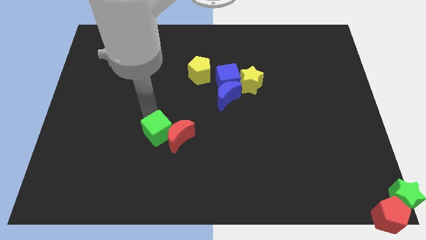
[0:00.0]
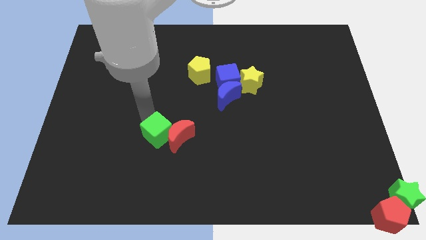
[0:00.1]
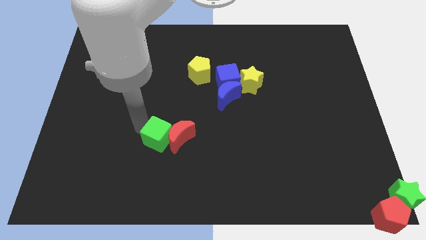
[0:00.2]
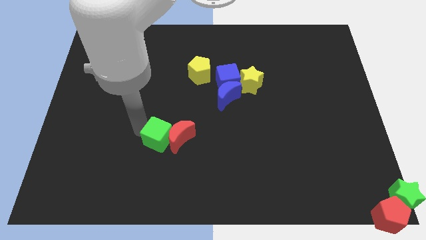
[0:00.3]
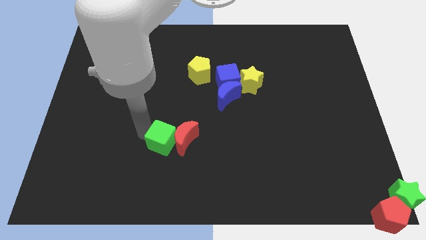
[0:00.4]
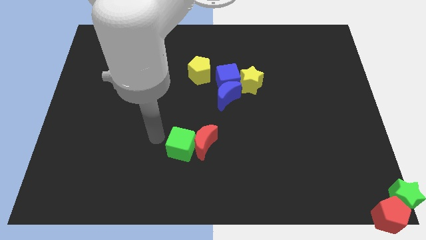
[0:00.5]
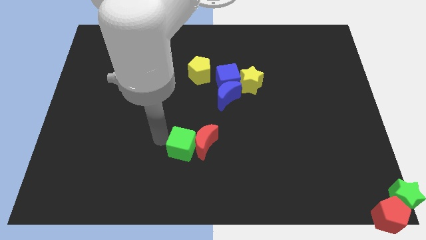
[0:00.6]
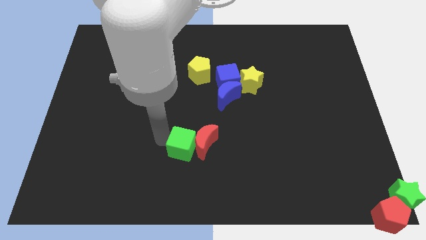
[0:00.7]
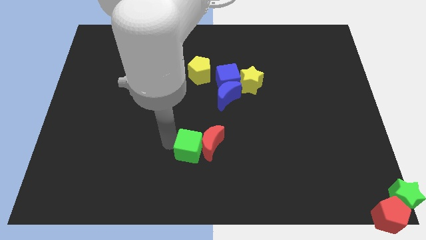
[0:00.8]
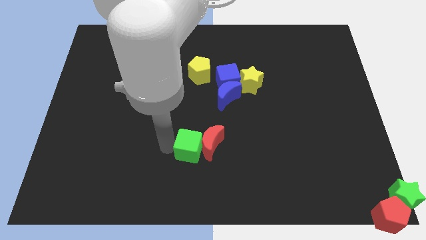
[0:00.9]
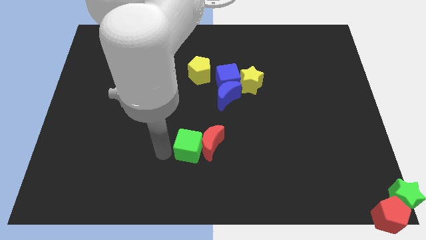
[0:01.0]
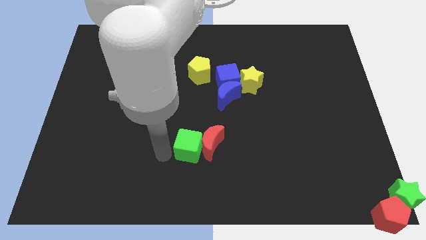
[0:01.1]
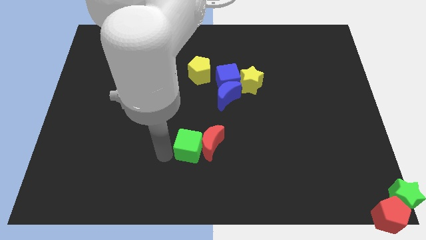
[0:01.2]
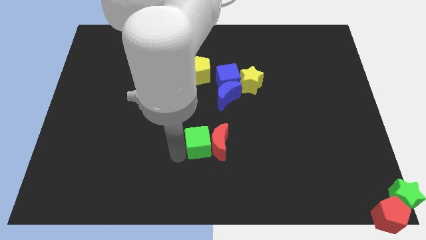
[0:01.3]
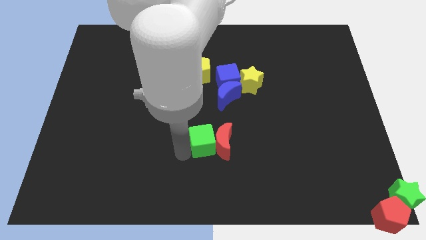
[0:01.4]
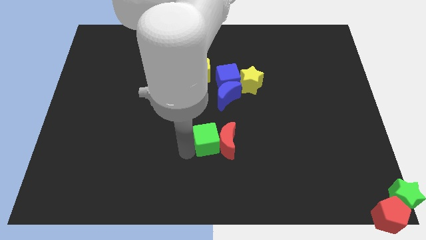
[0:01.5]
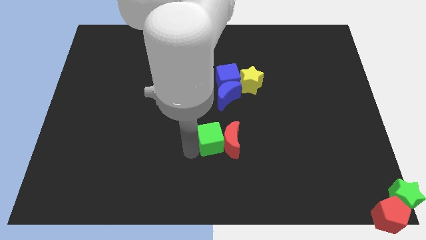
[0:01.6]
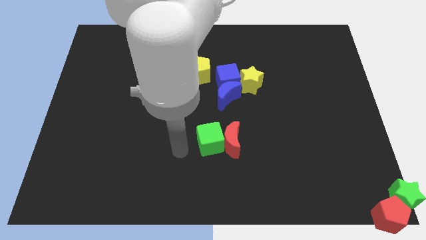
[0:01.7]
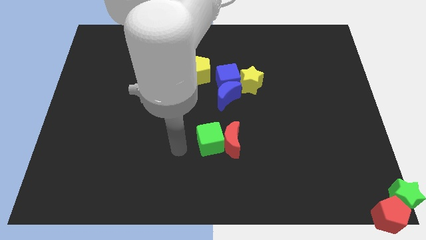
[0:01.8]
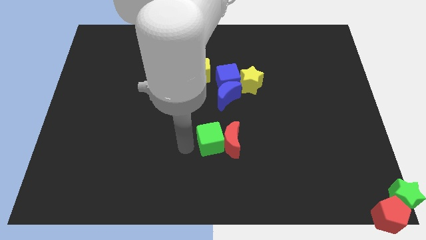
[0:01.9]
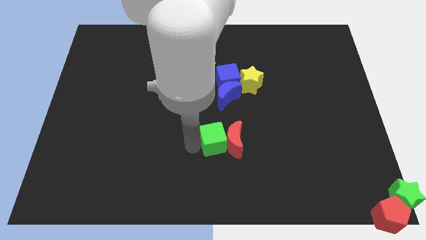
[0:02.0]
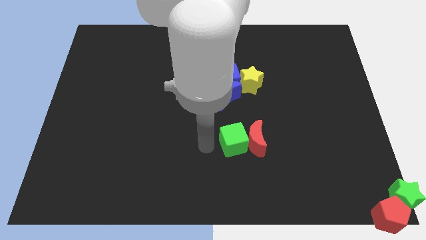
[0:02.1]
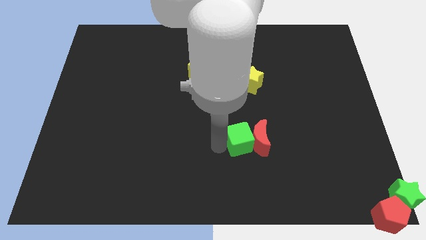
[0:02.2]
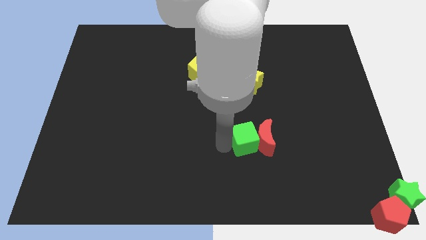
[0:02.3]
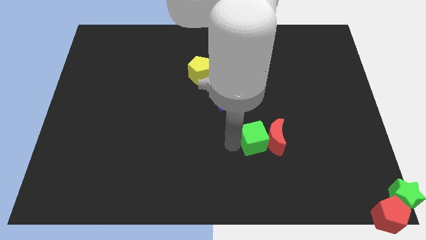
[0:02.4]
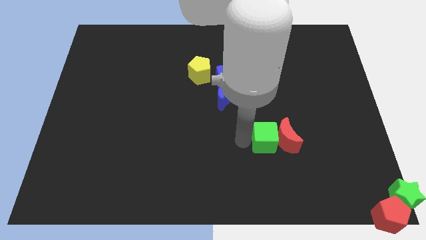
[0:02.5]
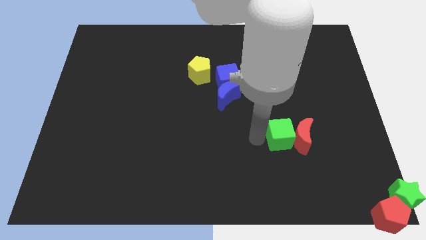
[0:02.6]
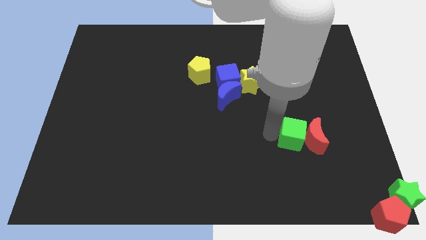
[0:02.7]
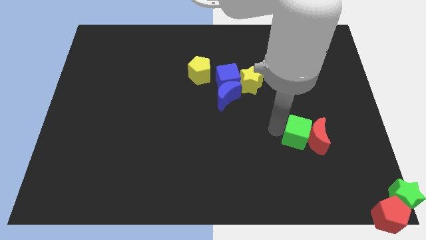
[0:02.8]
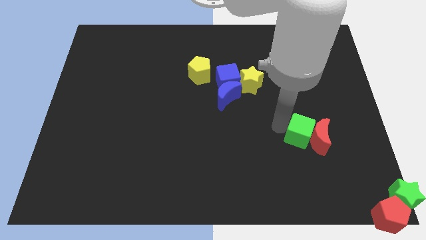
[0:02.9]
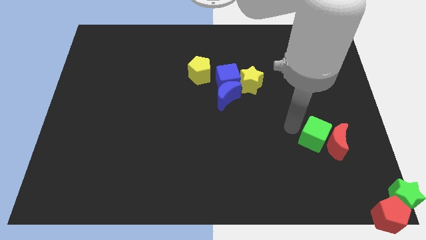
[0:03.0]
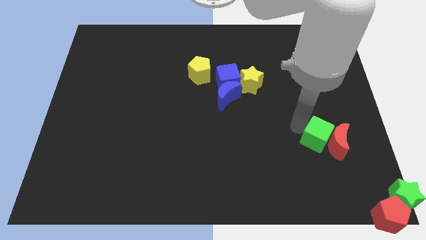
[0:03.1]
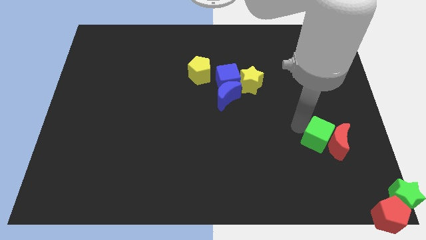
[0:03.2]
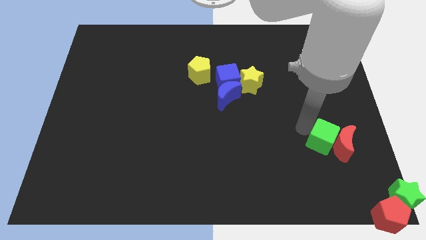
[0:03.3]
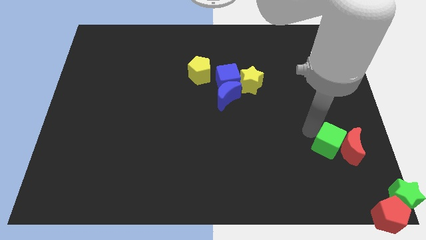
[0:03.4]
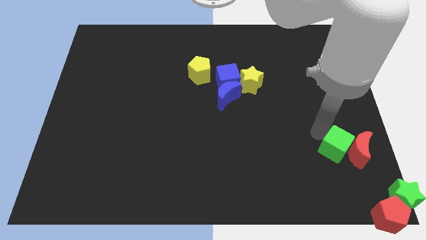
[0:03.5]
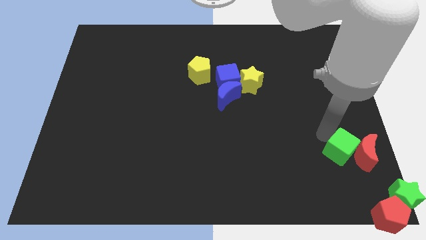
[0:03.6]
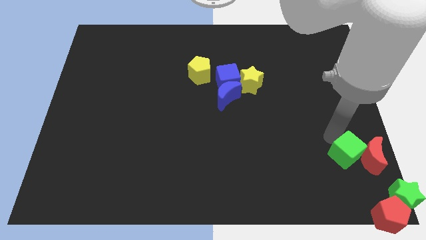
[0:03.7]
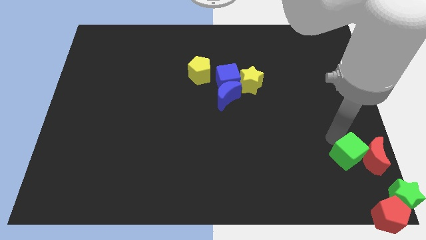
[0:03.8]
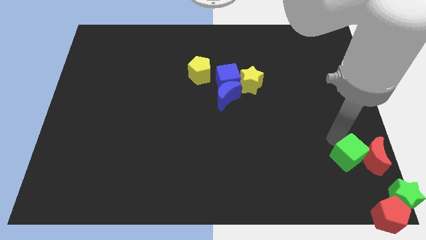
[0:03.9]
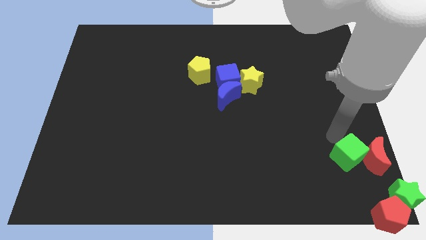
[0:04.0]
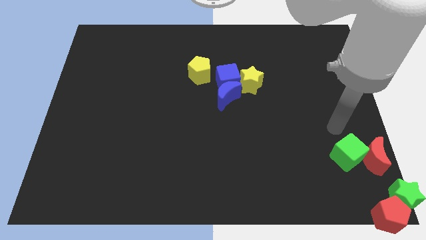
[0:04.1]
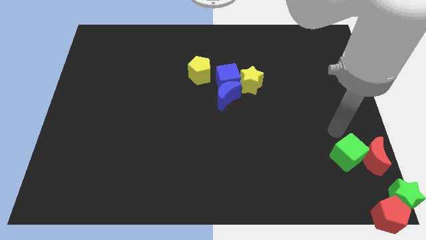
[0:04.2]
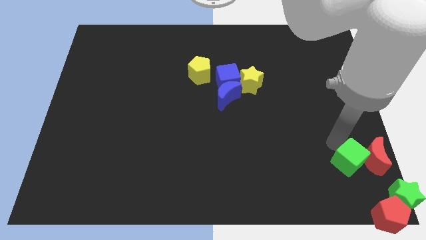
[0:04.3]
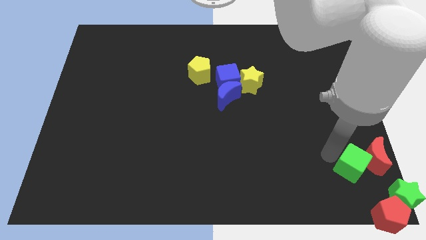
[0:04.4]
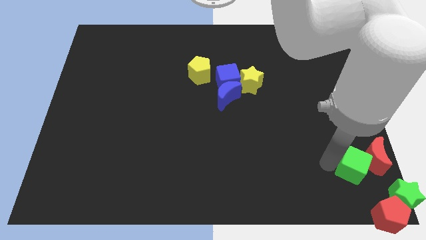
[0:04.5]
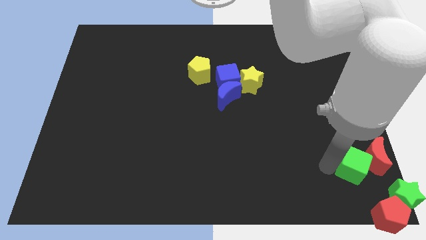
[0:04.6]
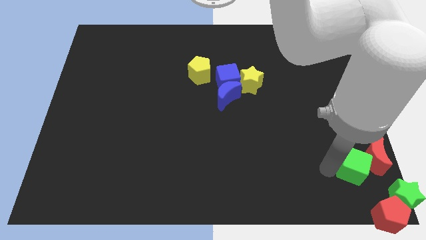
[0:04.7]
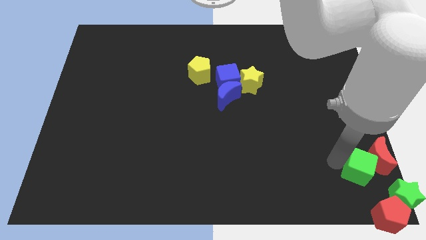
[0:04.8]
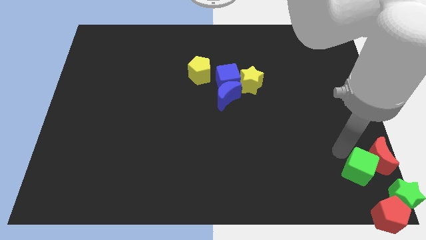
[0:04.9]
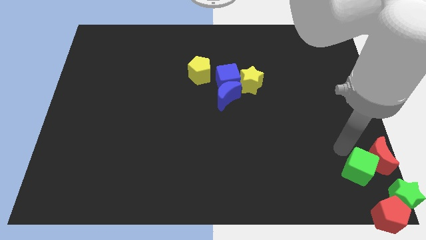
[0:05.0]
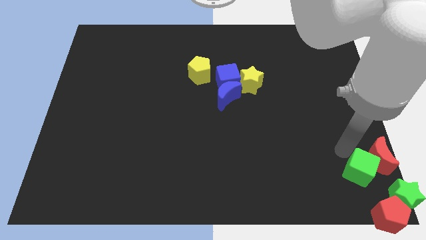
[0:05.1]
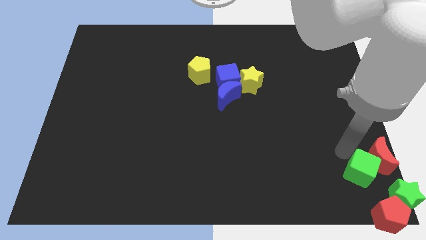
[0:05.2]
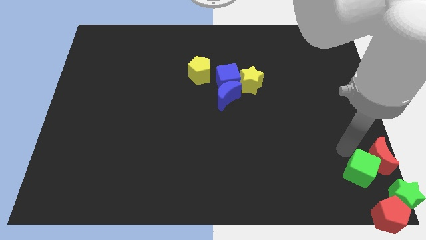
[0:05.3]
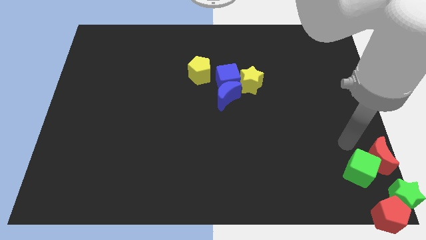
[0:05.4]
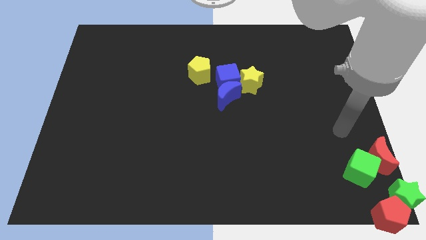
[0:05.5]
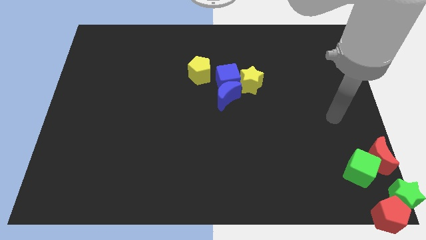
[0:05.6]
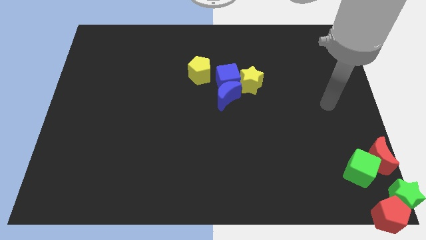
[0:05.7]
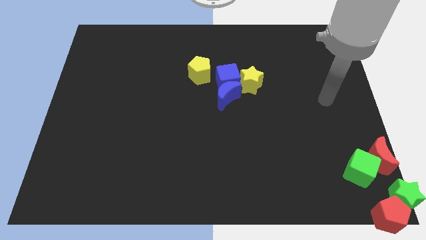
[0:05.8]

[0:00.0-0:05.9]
push green cube and red moon to the right side of the board

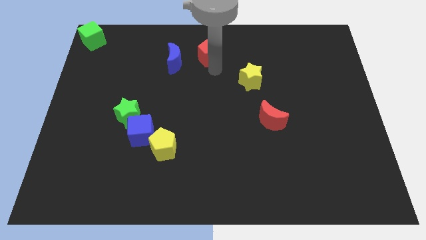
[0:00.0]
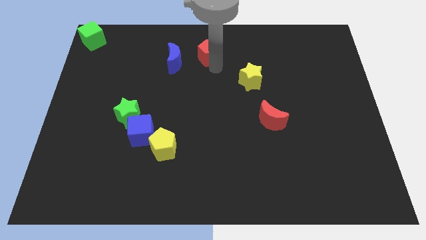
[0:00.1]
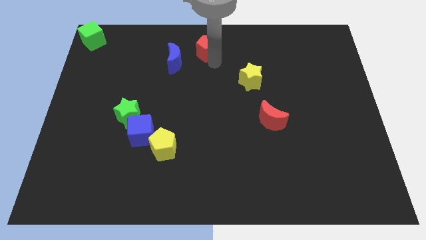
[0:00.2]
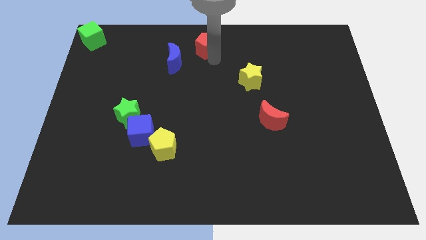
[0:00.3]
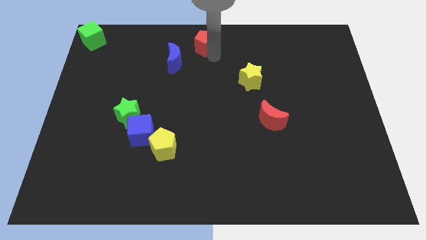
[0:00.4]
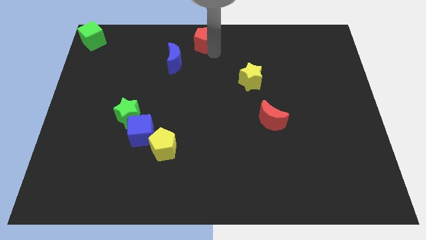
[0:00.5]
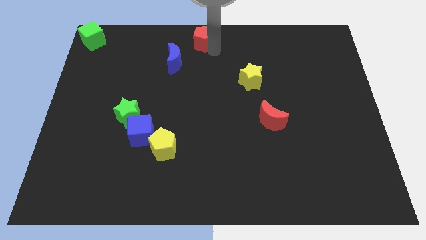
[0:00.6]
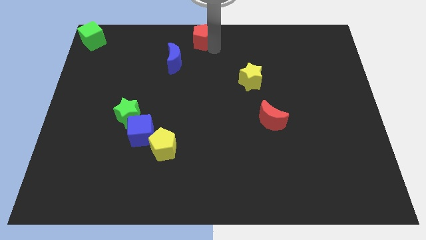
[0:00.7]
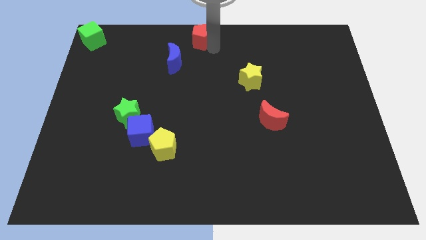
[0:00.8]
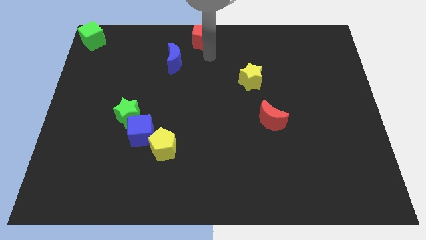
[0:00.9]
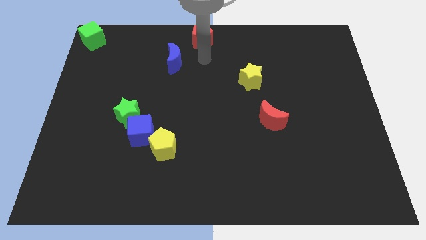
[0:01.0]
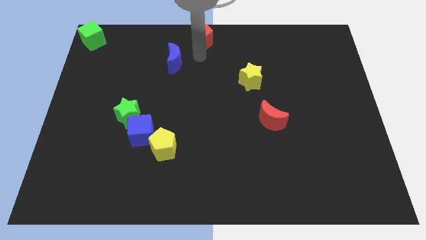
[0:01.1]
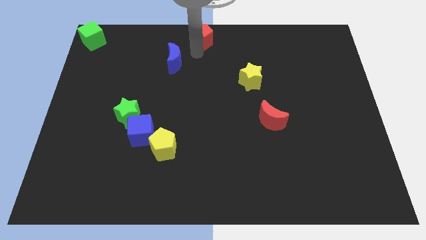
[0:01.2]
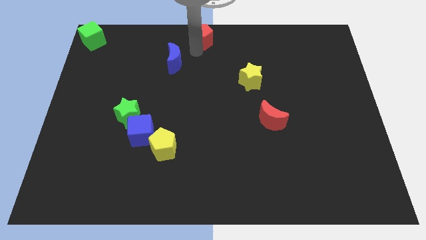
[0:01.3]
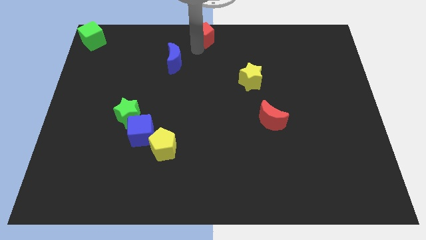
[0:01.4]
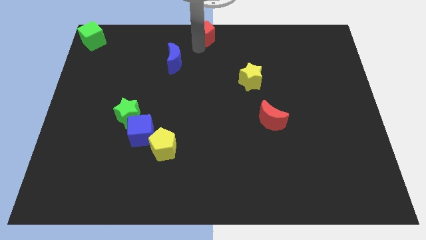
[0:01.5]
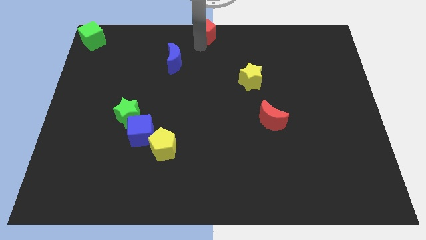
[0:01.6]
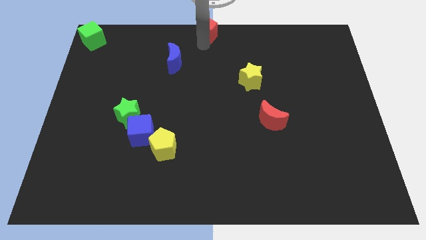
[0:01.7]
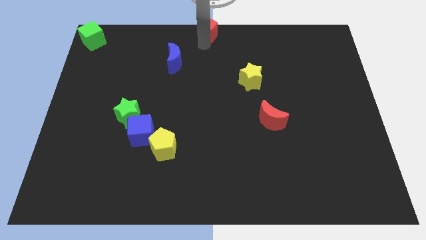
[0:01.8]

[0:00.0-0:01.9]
push the red pentagon to the center top

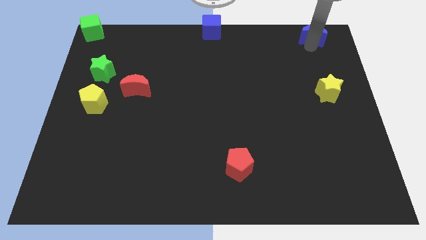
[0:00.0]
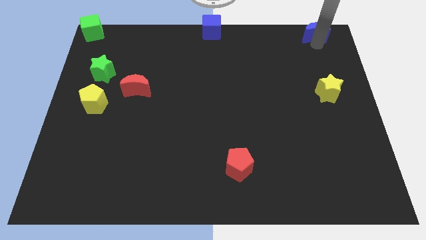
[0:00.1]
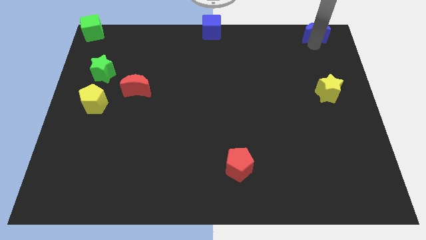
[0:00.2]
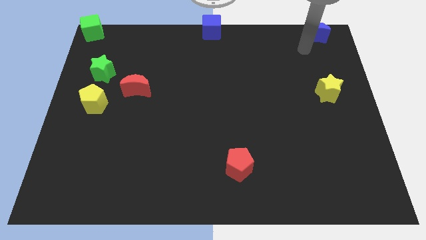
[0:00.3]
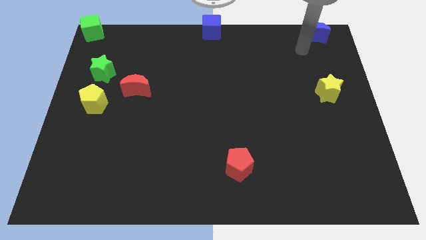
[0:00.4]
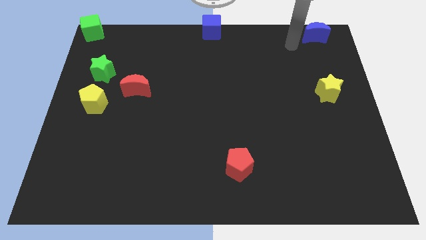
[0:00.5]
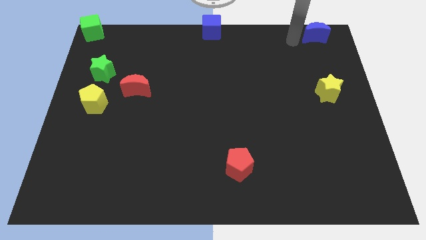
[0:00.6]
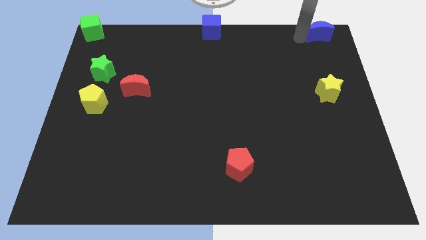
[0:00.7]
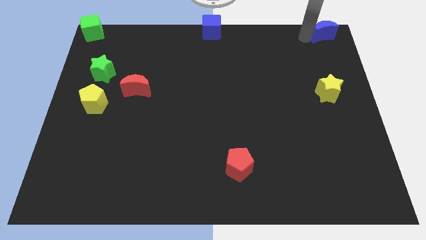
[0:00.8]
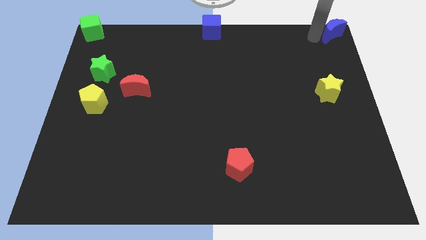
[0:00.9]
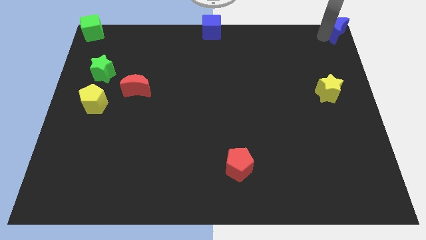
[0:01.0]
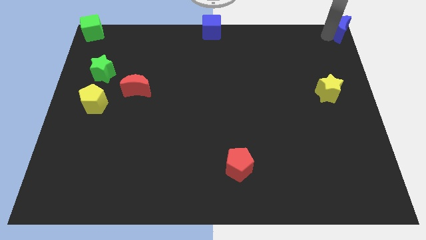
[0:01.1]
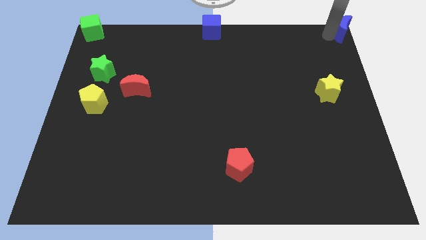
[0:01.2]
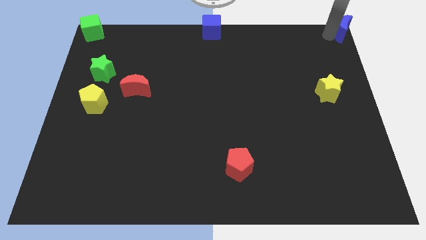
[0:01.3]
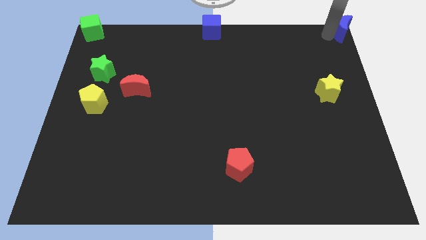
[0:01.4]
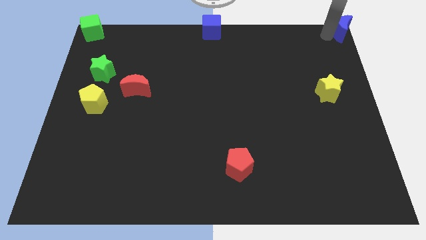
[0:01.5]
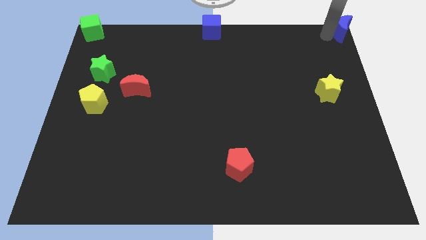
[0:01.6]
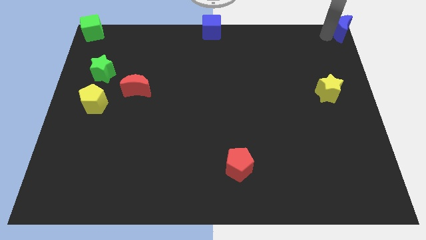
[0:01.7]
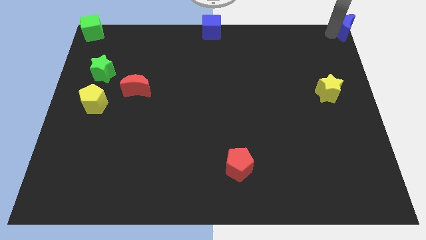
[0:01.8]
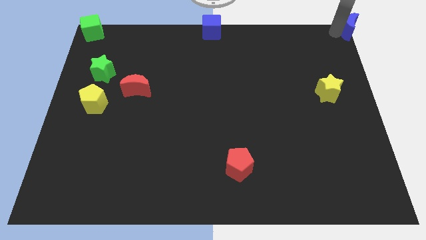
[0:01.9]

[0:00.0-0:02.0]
reposition the blue crescent at top right corner of the board
